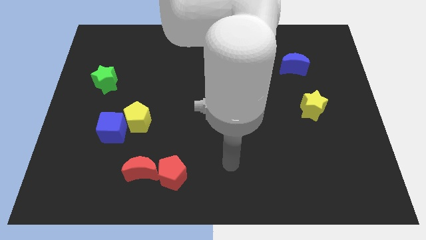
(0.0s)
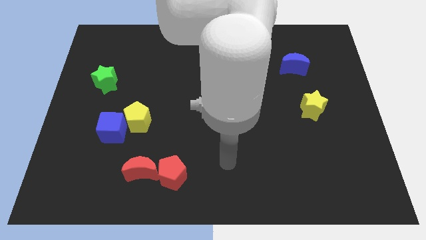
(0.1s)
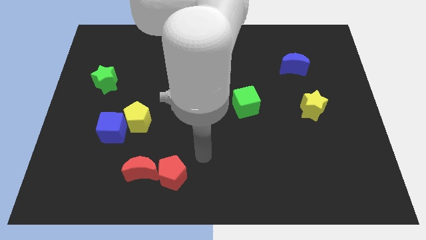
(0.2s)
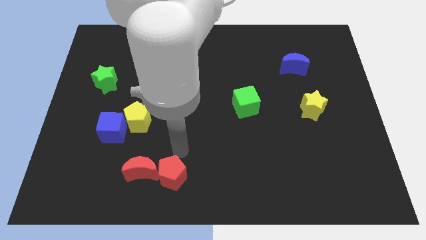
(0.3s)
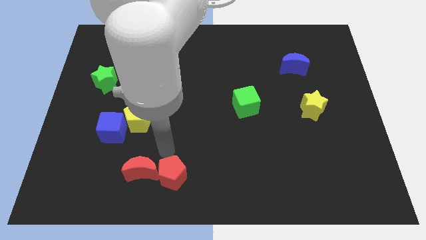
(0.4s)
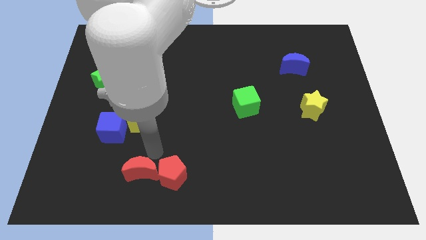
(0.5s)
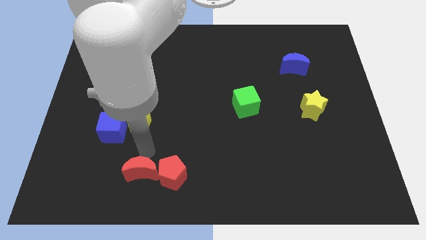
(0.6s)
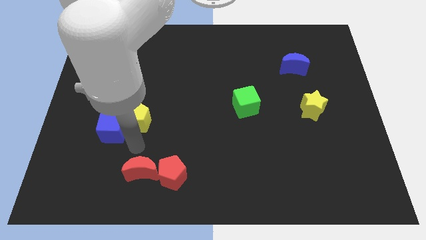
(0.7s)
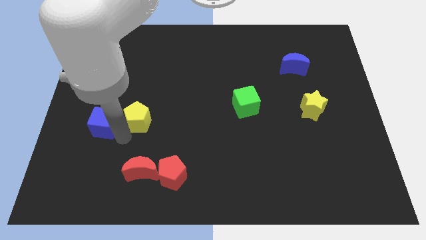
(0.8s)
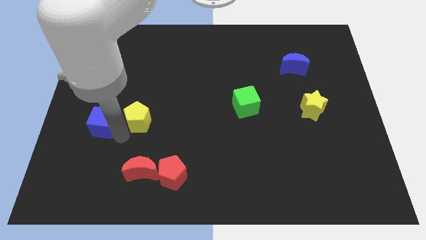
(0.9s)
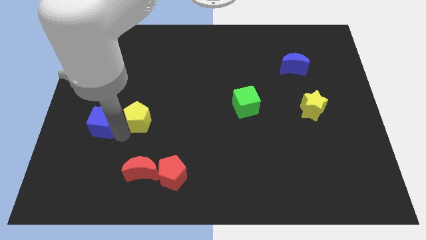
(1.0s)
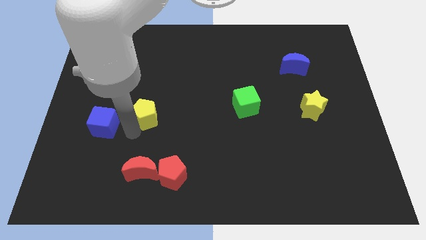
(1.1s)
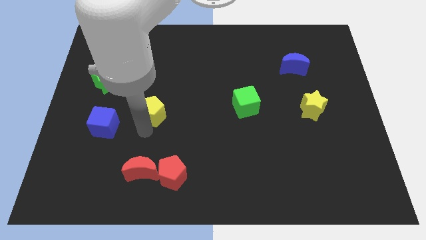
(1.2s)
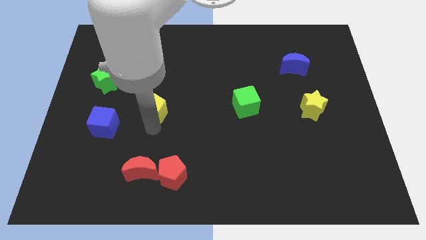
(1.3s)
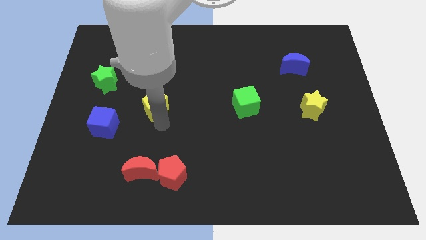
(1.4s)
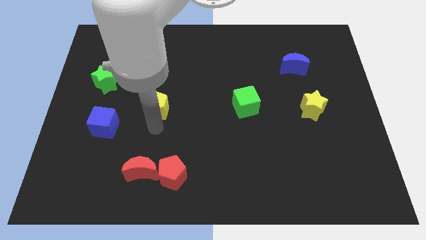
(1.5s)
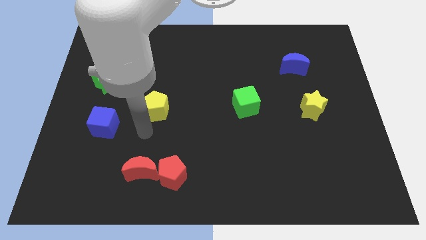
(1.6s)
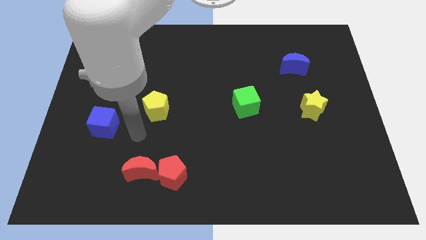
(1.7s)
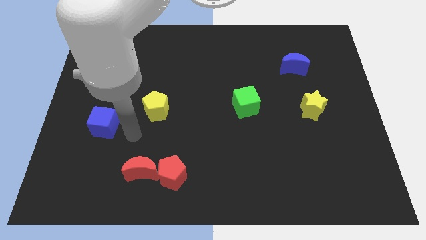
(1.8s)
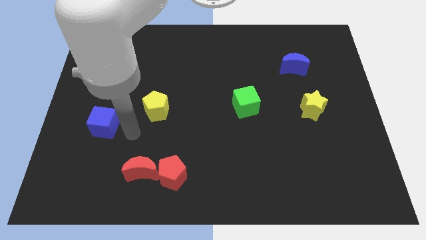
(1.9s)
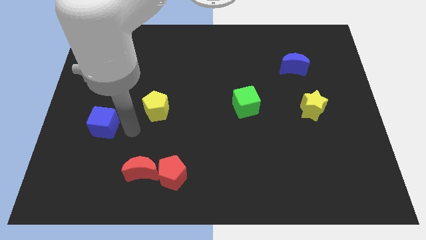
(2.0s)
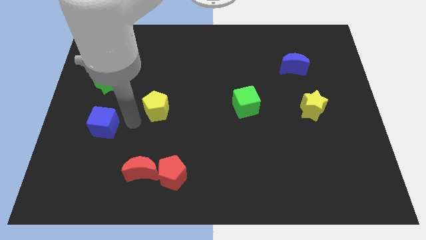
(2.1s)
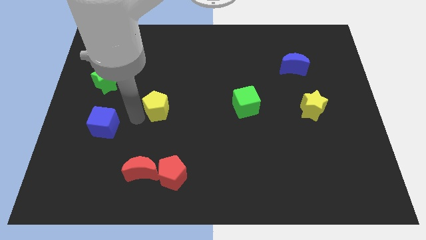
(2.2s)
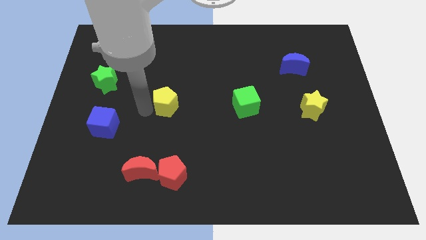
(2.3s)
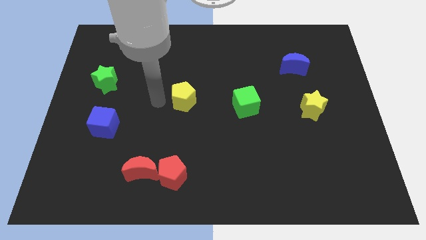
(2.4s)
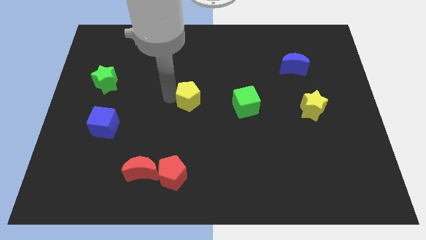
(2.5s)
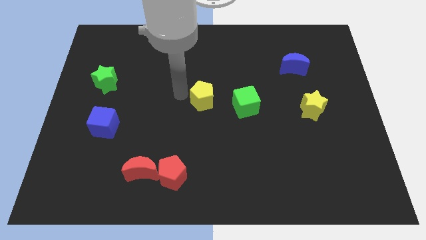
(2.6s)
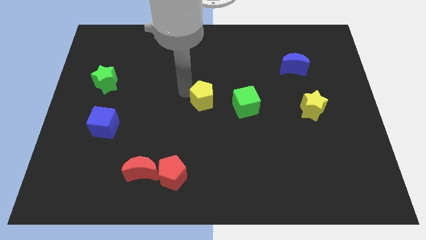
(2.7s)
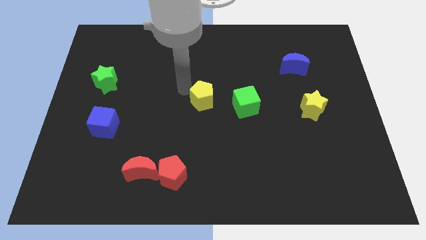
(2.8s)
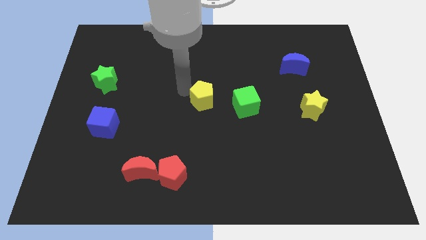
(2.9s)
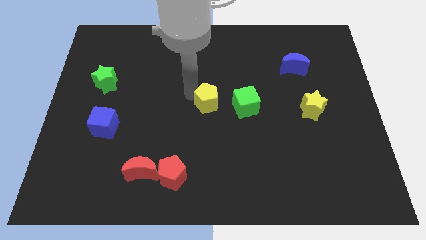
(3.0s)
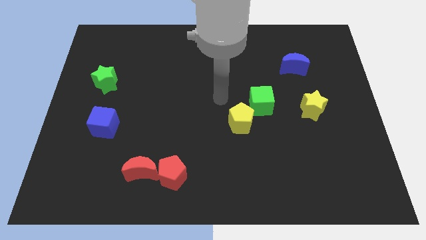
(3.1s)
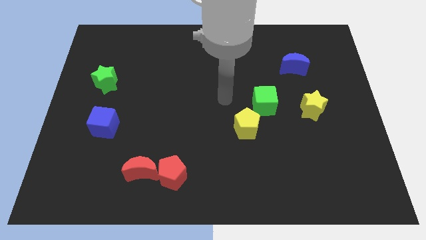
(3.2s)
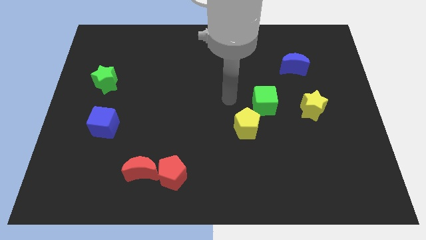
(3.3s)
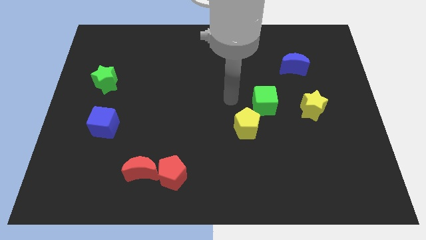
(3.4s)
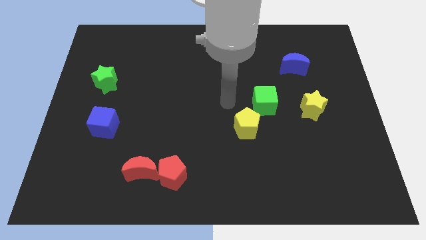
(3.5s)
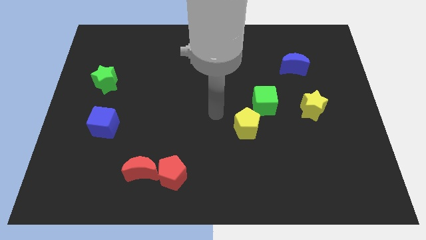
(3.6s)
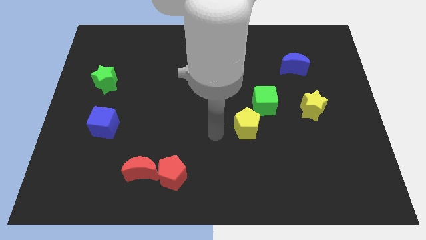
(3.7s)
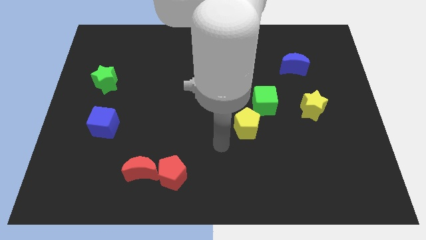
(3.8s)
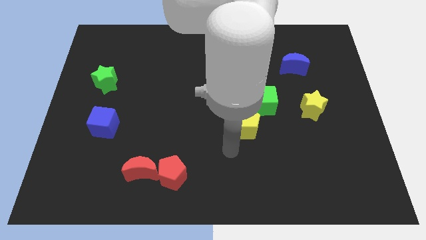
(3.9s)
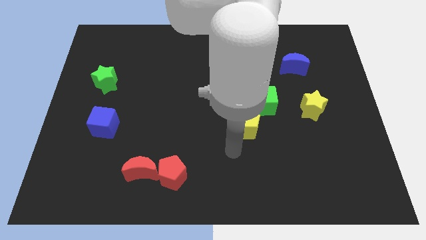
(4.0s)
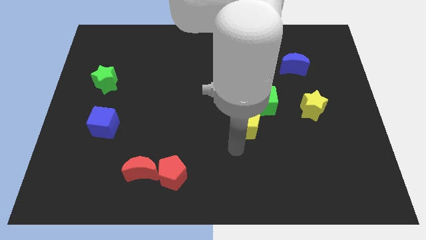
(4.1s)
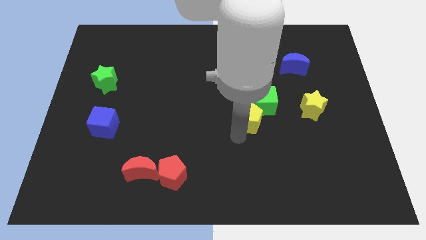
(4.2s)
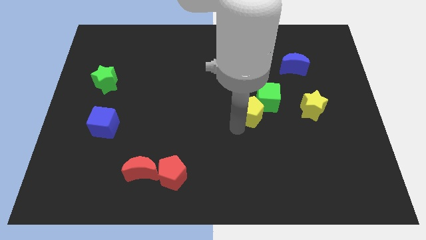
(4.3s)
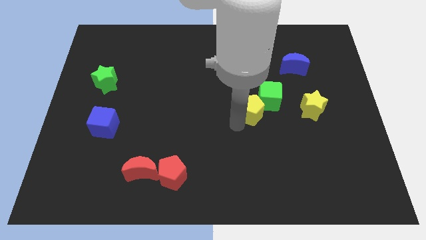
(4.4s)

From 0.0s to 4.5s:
put the yellow pentagon towards the green cube

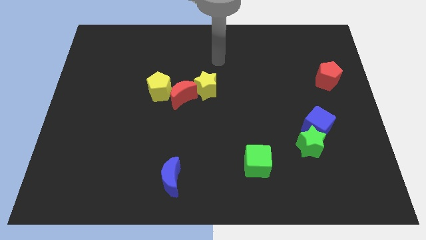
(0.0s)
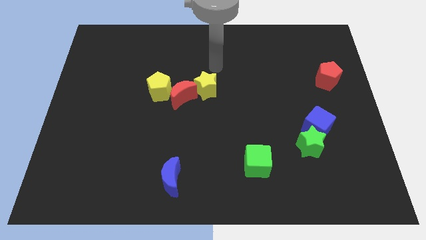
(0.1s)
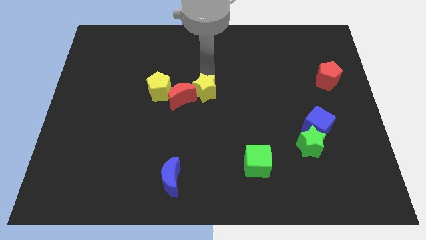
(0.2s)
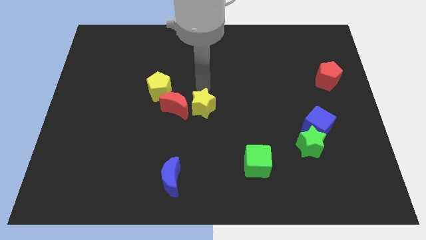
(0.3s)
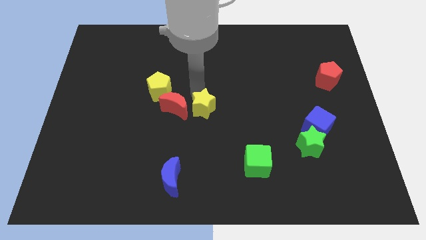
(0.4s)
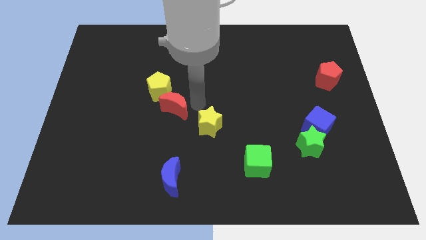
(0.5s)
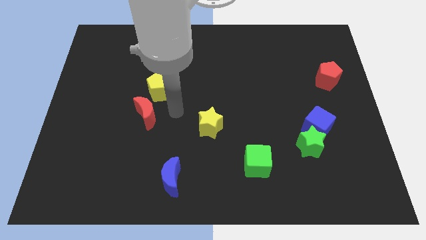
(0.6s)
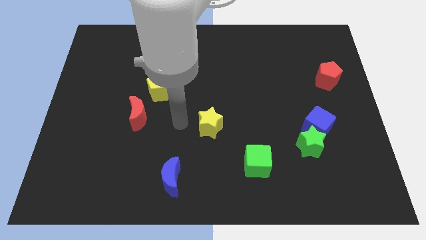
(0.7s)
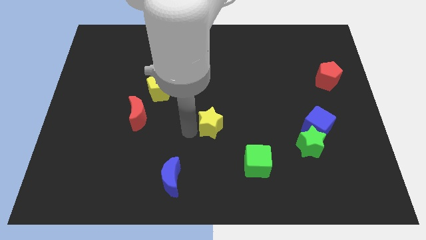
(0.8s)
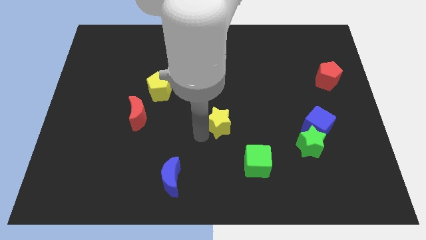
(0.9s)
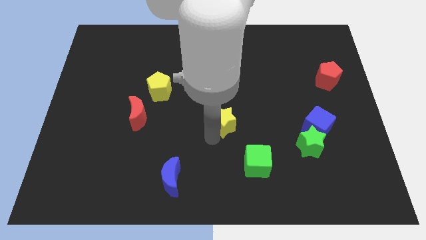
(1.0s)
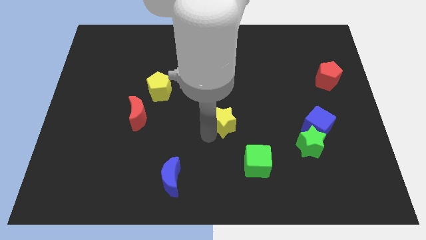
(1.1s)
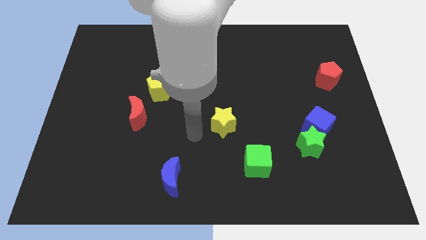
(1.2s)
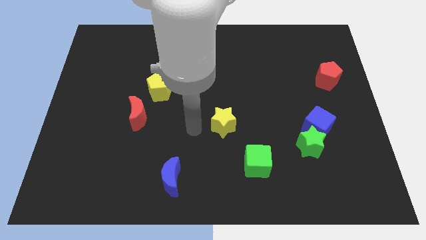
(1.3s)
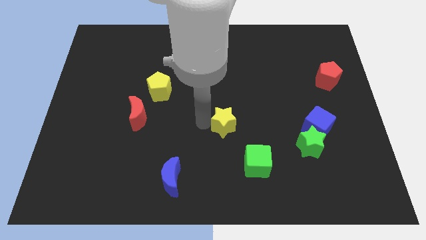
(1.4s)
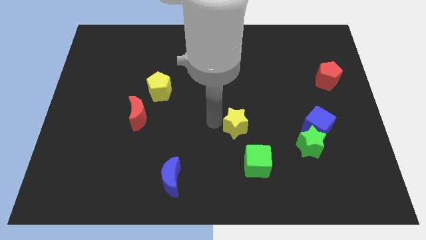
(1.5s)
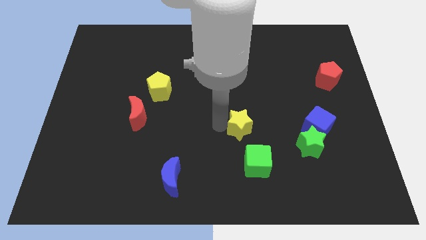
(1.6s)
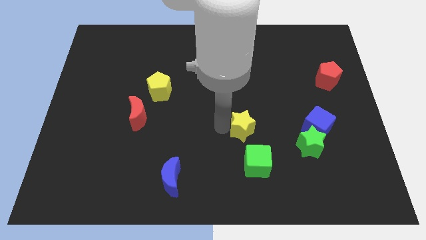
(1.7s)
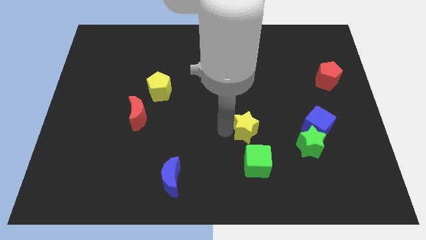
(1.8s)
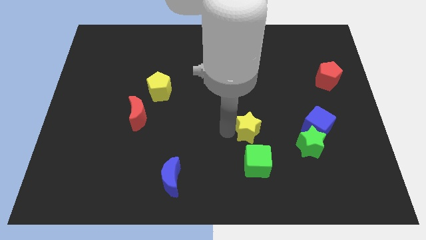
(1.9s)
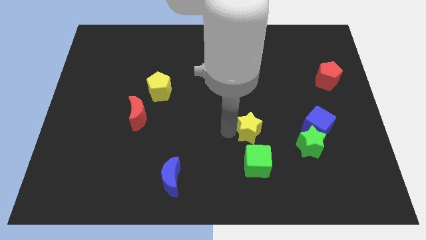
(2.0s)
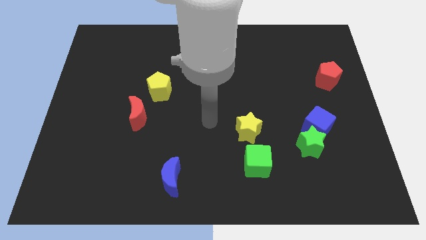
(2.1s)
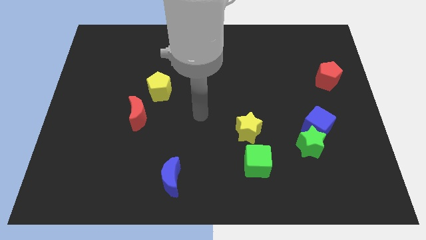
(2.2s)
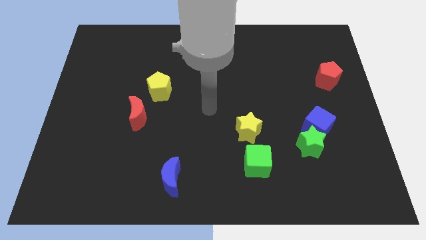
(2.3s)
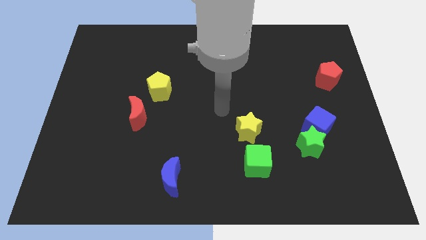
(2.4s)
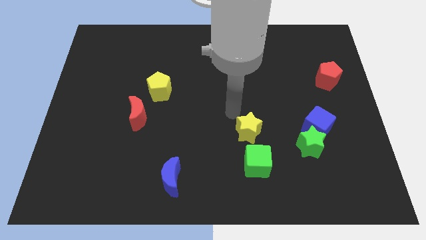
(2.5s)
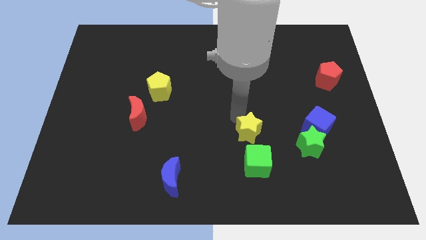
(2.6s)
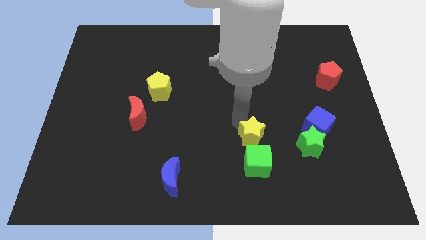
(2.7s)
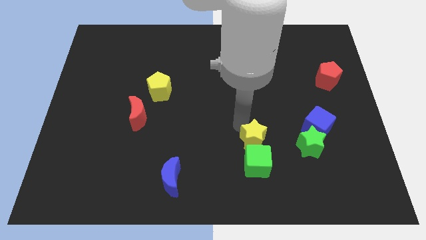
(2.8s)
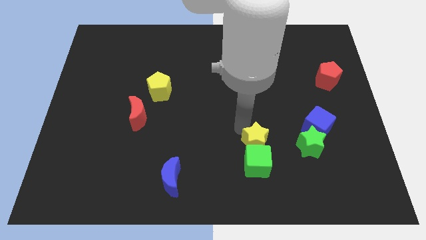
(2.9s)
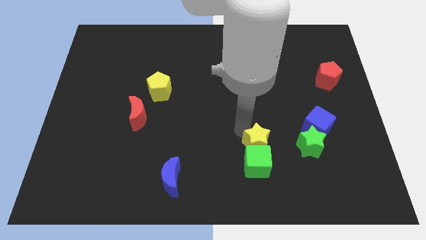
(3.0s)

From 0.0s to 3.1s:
push the yellow star next to the green cube

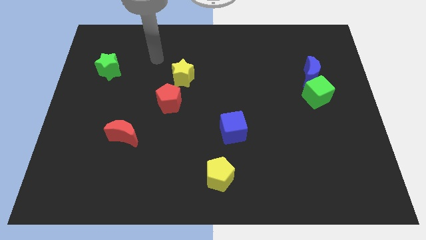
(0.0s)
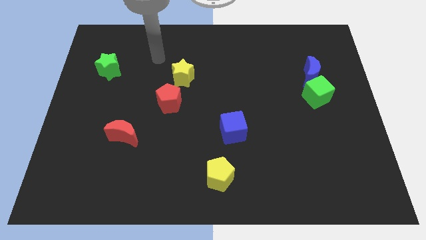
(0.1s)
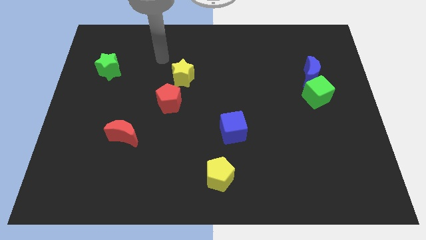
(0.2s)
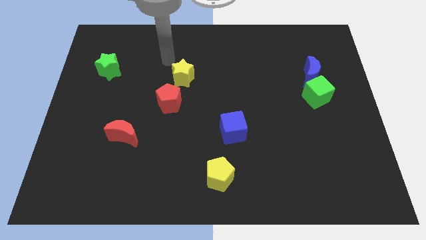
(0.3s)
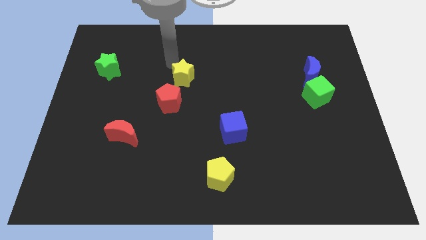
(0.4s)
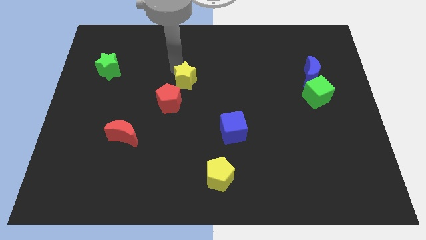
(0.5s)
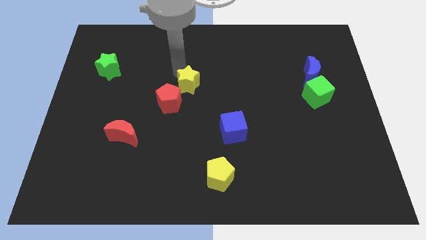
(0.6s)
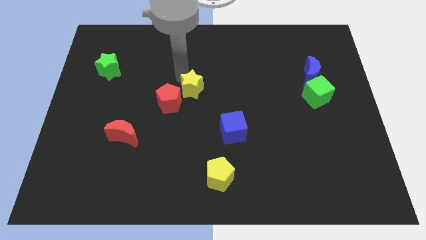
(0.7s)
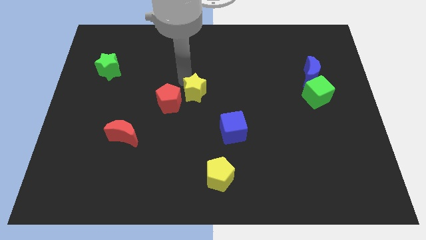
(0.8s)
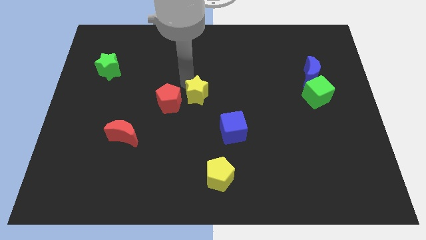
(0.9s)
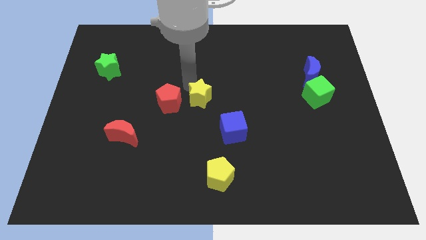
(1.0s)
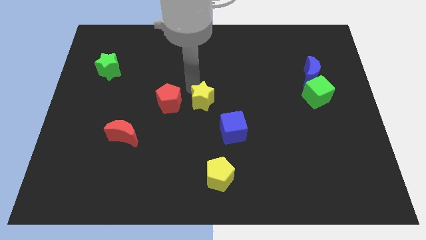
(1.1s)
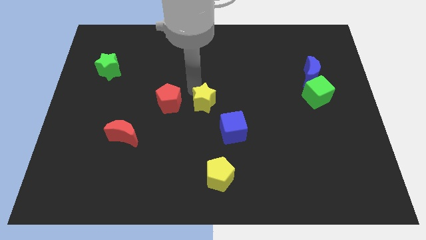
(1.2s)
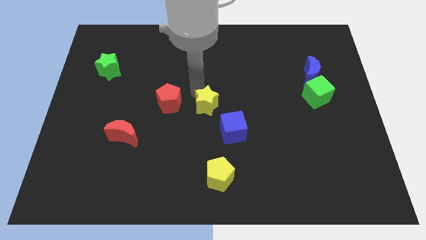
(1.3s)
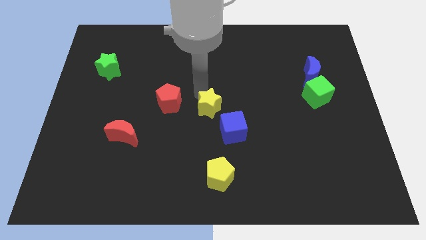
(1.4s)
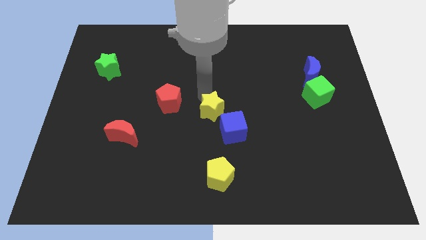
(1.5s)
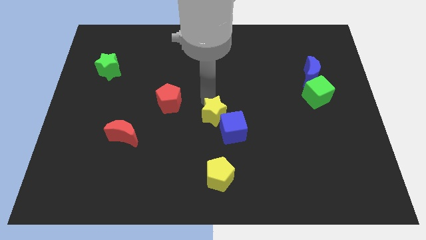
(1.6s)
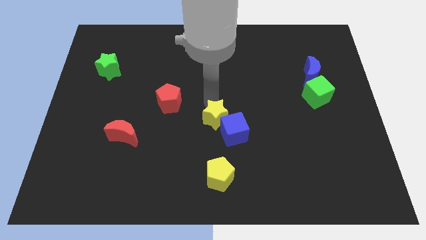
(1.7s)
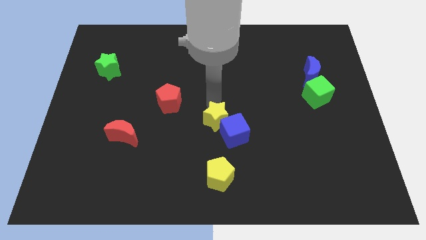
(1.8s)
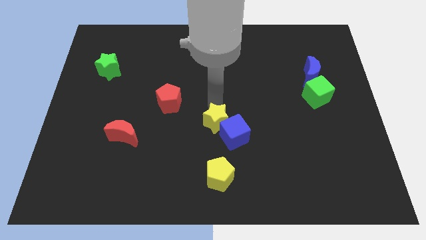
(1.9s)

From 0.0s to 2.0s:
push the yellow star towards the blue cube
